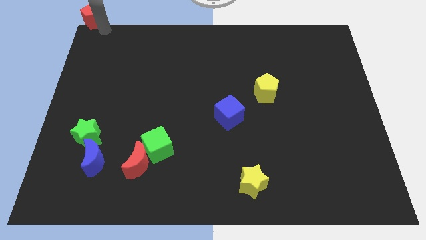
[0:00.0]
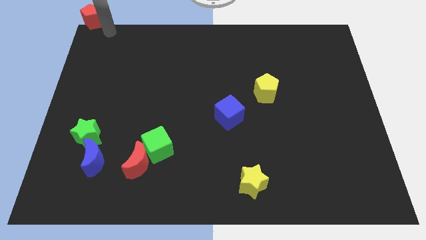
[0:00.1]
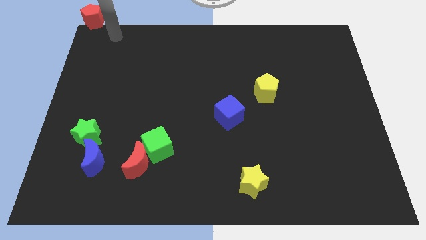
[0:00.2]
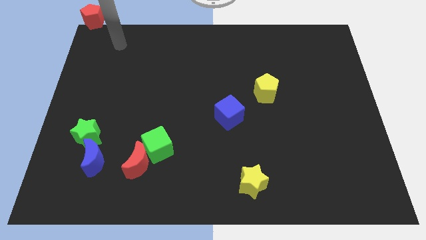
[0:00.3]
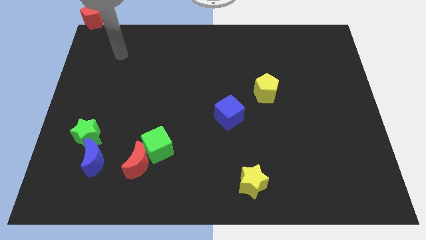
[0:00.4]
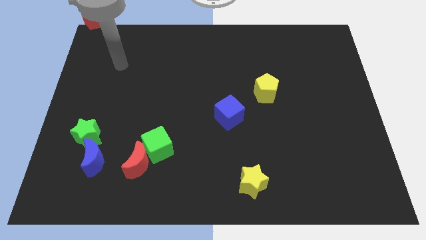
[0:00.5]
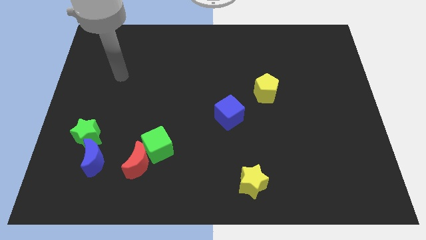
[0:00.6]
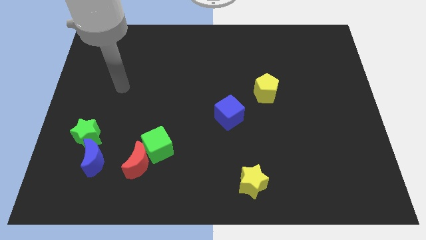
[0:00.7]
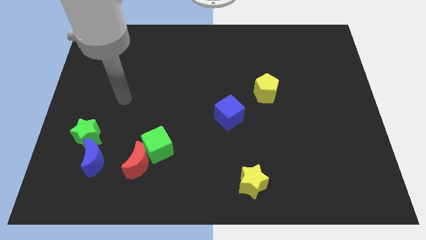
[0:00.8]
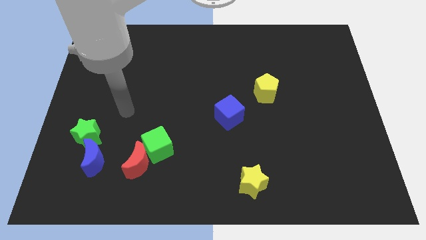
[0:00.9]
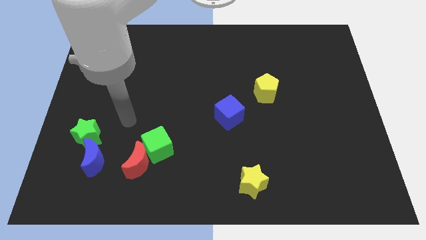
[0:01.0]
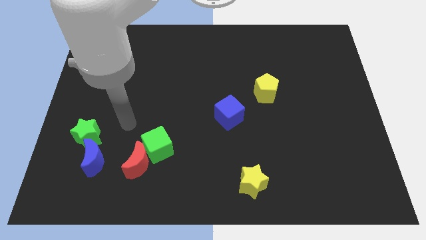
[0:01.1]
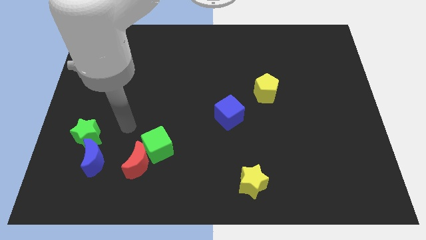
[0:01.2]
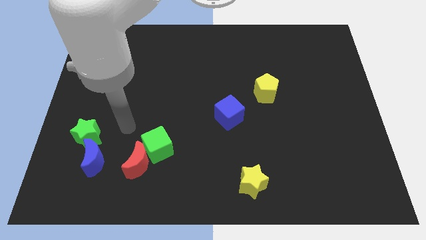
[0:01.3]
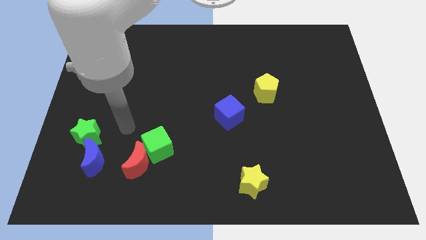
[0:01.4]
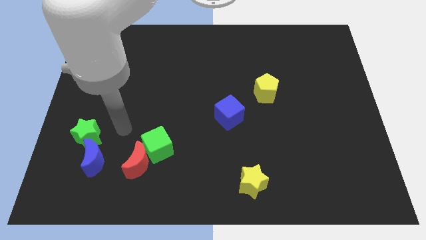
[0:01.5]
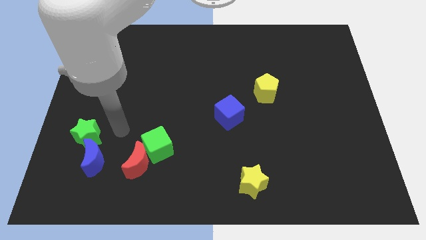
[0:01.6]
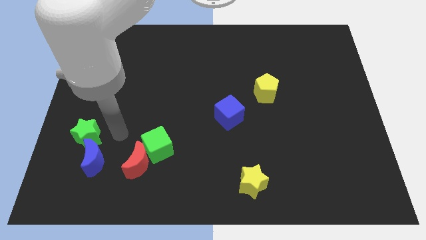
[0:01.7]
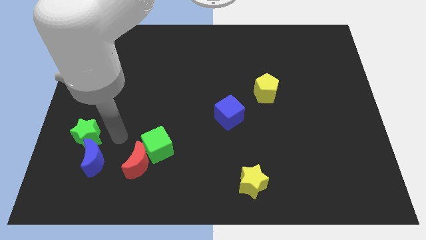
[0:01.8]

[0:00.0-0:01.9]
move your arm away from the red pentagon

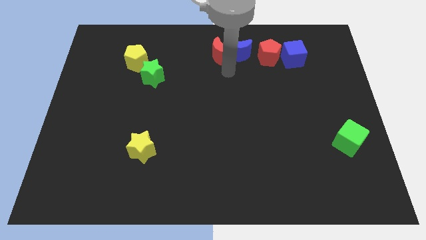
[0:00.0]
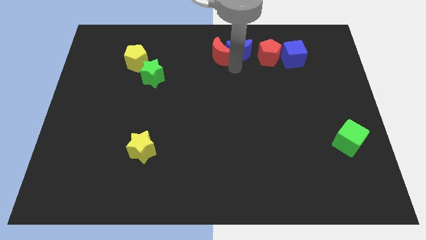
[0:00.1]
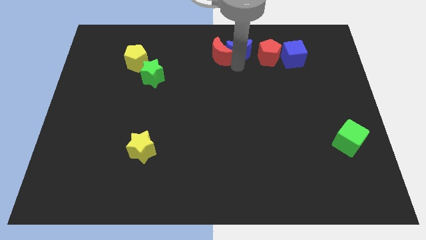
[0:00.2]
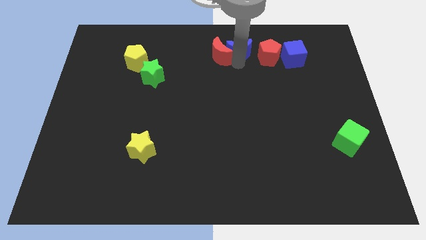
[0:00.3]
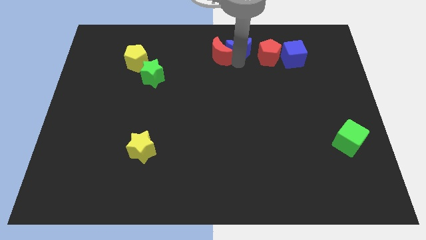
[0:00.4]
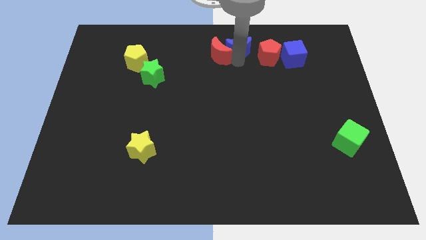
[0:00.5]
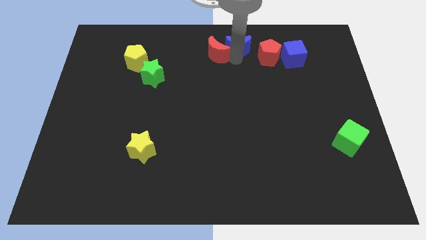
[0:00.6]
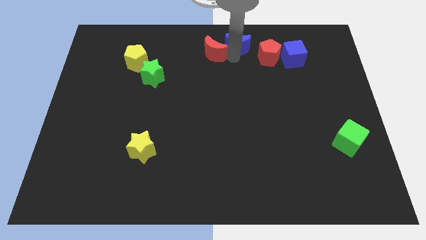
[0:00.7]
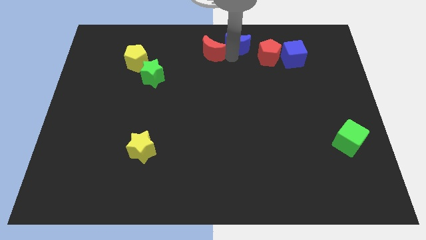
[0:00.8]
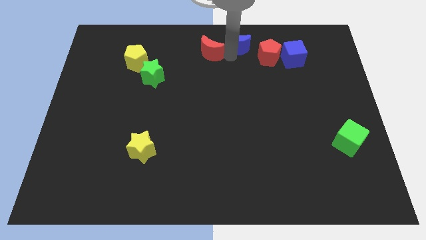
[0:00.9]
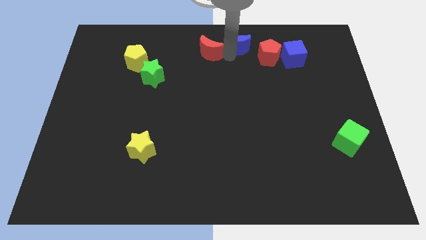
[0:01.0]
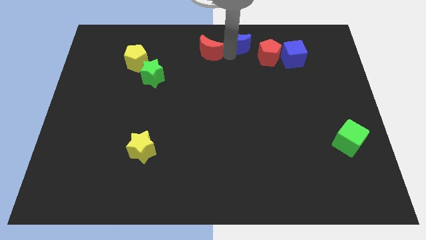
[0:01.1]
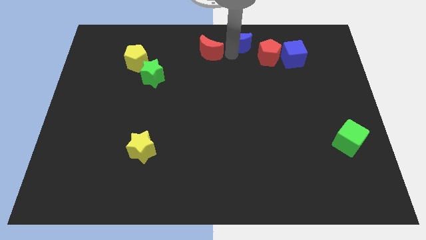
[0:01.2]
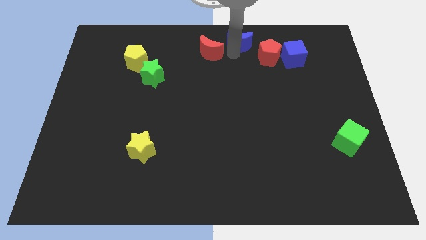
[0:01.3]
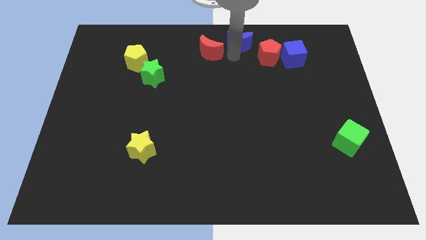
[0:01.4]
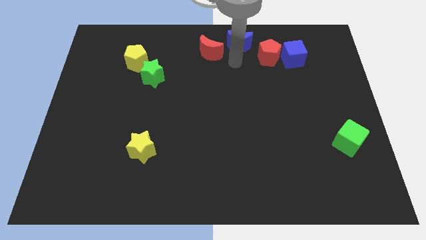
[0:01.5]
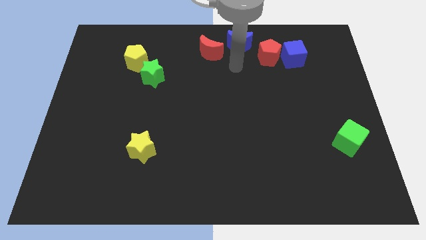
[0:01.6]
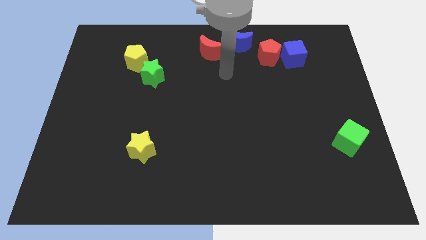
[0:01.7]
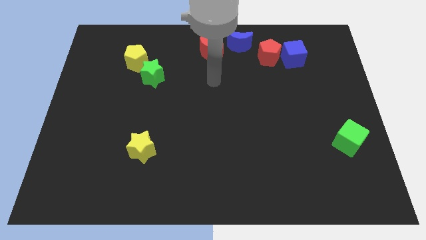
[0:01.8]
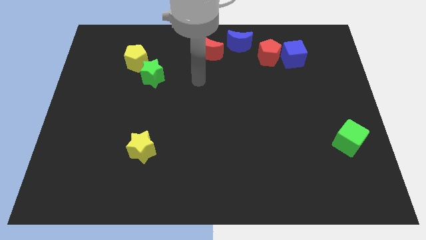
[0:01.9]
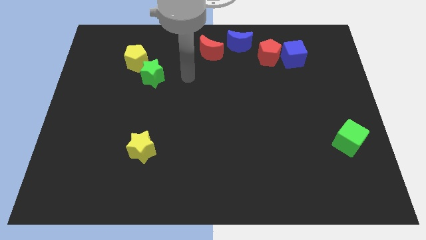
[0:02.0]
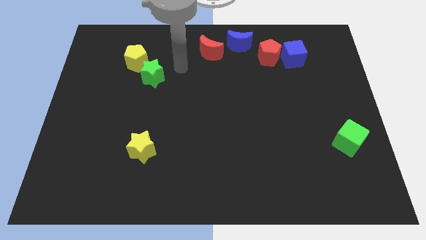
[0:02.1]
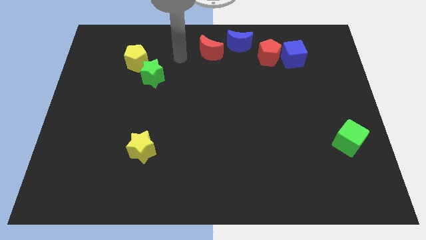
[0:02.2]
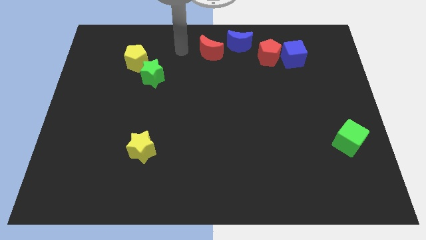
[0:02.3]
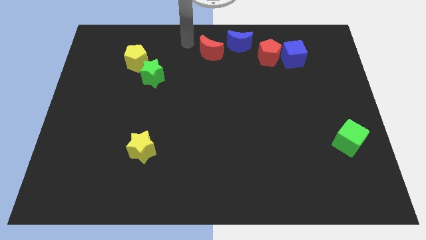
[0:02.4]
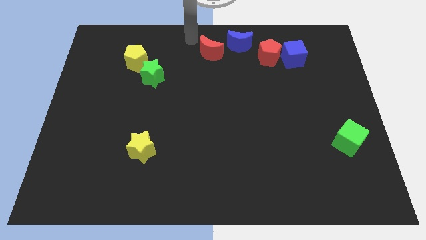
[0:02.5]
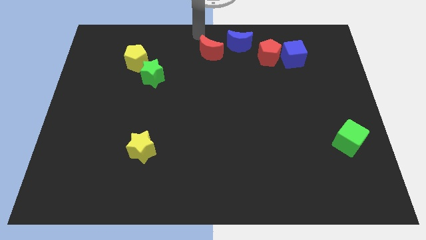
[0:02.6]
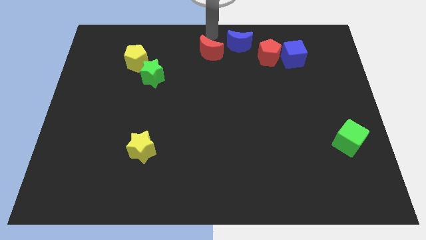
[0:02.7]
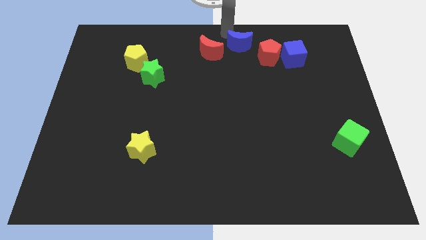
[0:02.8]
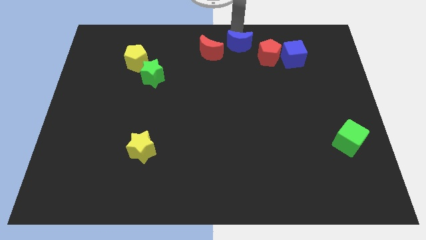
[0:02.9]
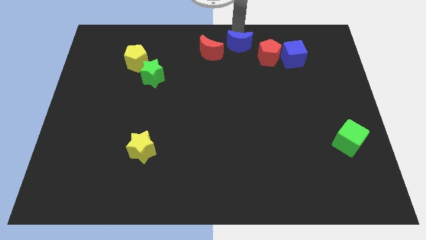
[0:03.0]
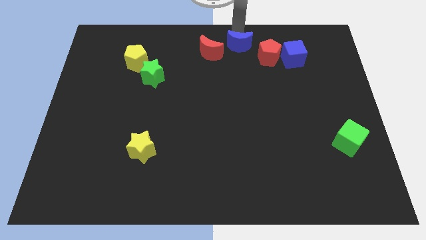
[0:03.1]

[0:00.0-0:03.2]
separate the blue moon and red moon

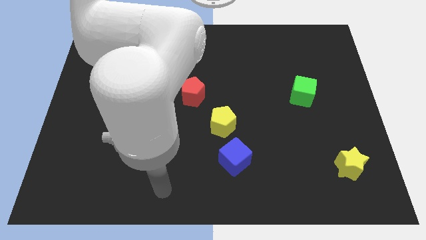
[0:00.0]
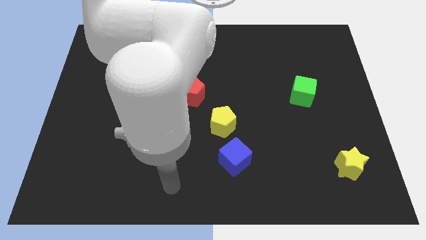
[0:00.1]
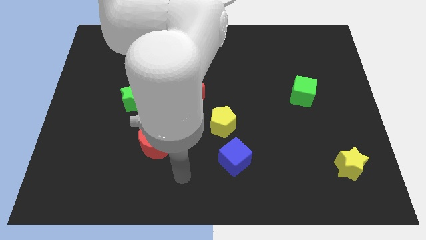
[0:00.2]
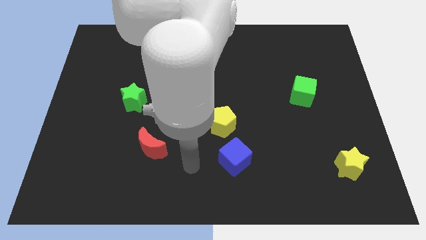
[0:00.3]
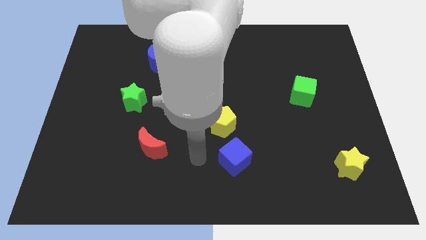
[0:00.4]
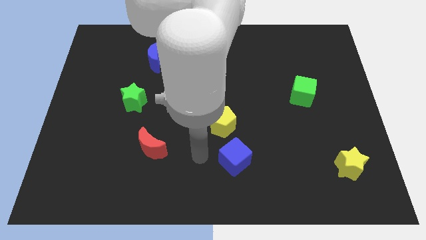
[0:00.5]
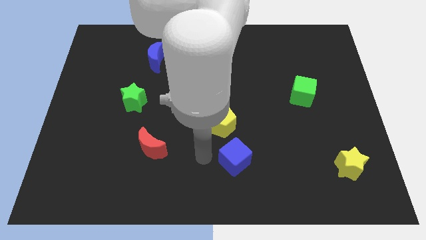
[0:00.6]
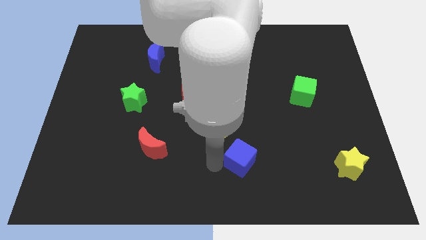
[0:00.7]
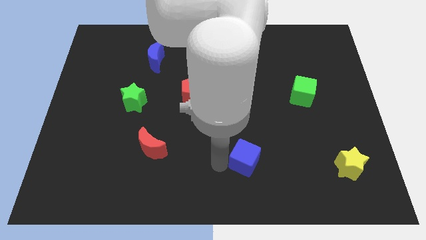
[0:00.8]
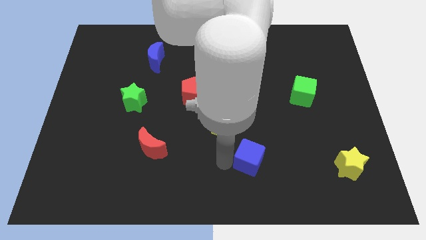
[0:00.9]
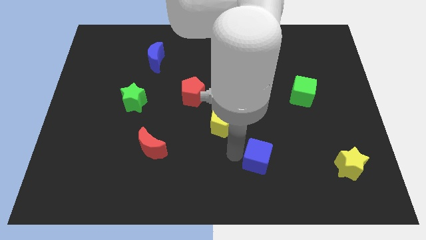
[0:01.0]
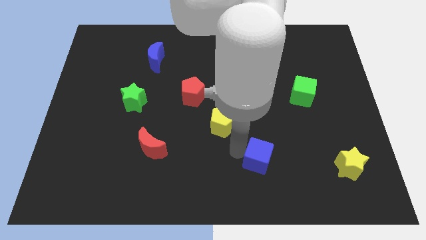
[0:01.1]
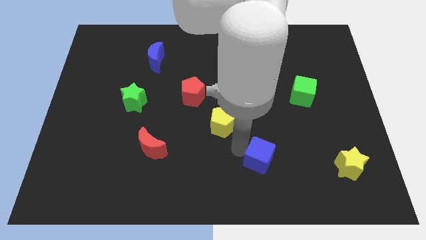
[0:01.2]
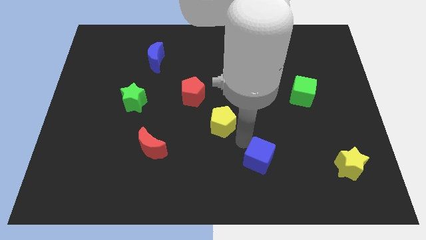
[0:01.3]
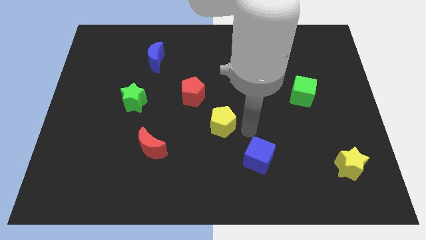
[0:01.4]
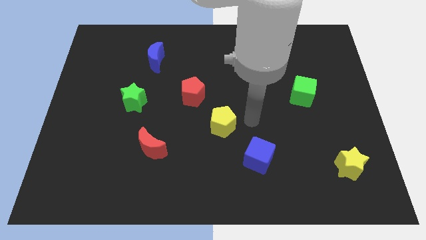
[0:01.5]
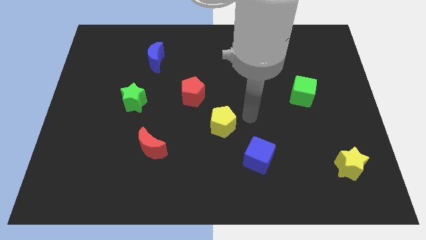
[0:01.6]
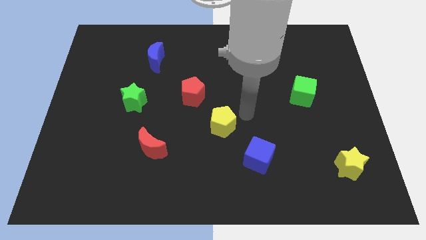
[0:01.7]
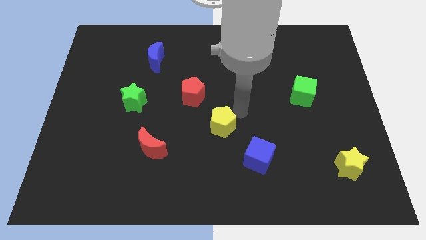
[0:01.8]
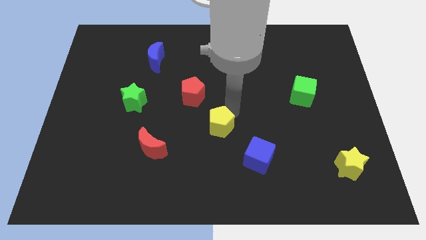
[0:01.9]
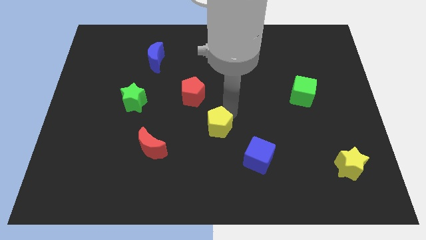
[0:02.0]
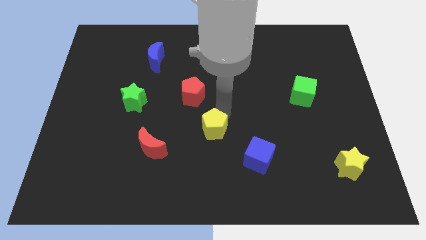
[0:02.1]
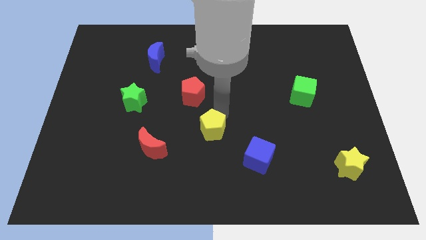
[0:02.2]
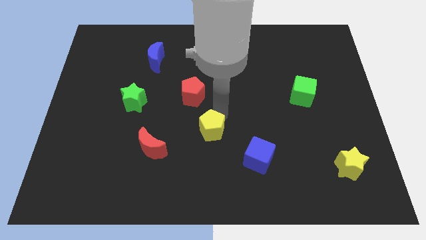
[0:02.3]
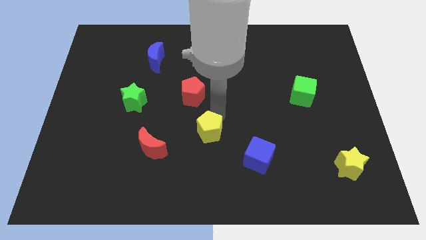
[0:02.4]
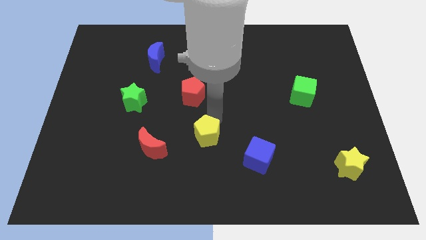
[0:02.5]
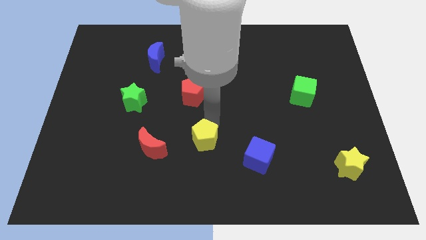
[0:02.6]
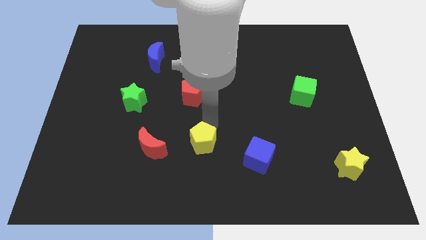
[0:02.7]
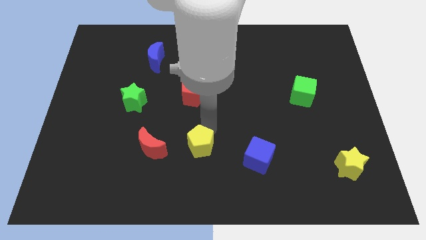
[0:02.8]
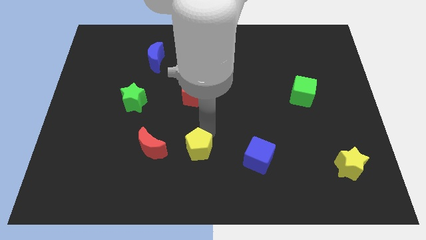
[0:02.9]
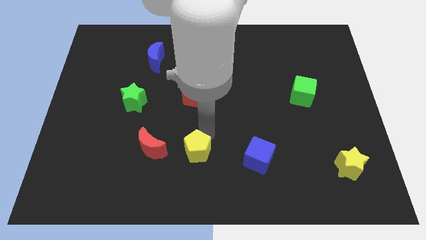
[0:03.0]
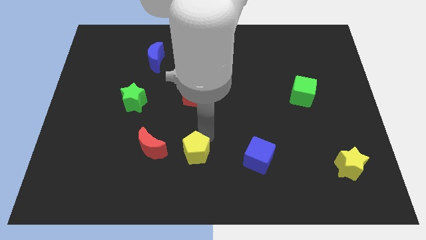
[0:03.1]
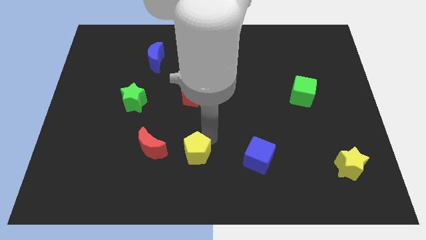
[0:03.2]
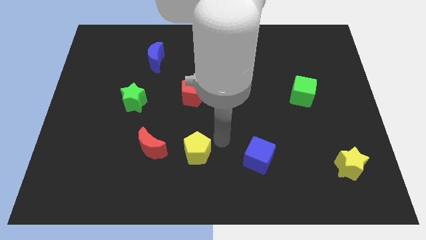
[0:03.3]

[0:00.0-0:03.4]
place blue cube and the yellow pentagon diagonally to the red crescent

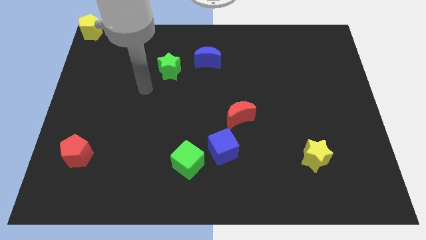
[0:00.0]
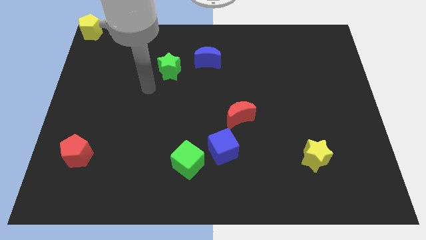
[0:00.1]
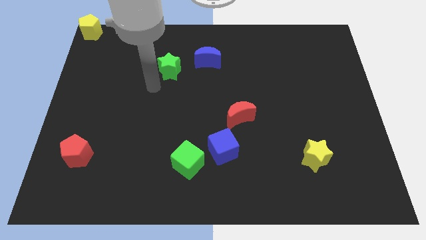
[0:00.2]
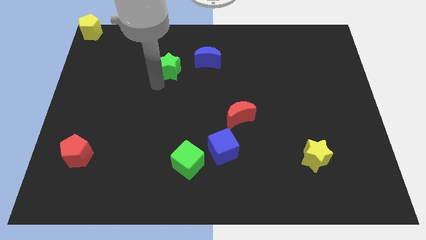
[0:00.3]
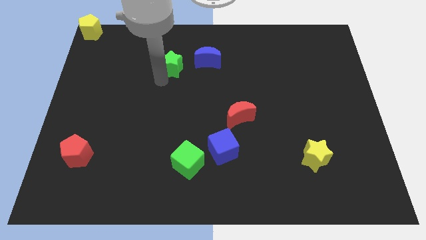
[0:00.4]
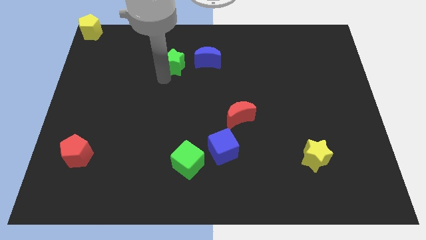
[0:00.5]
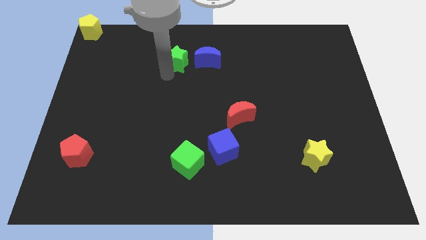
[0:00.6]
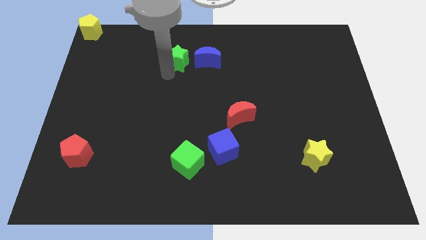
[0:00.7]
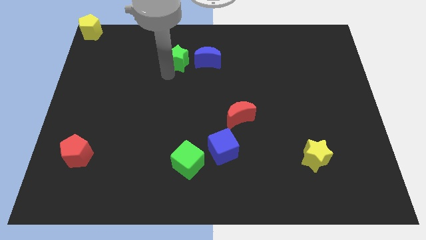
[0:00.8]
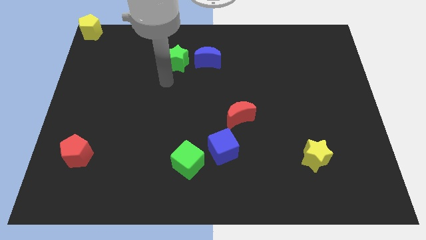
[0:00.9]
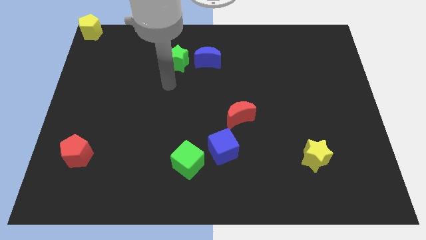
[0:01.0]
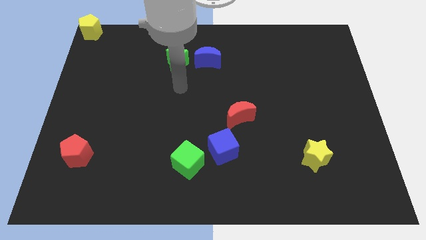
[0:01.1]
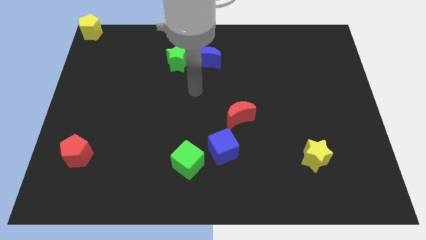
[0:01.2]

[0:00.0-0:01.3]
place the green star left to the blue crescent
